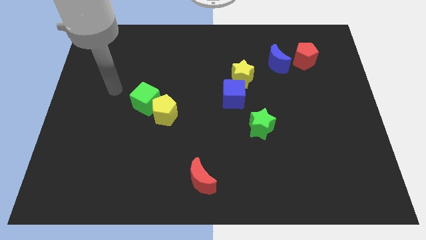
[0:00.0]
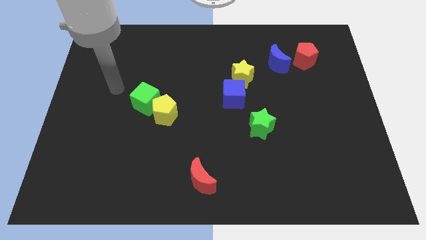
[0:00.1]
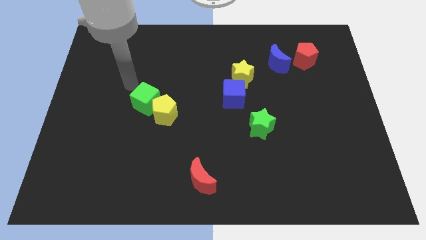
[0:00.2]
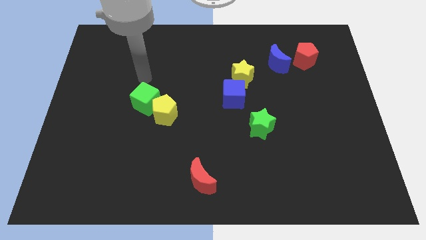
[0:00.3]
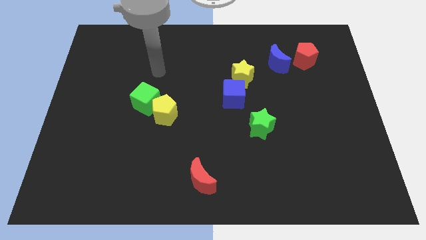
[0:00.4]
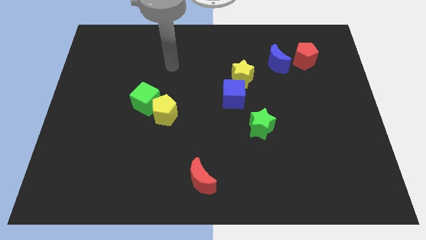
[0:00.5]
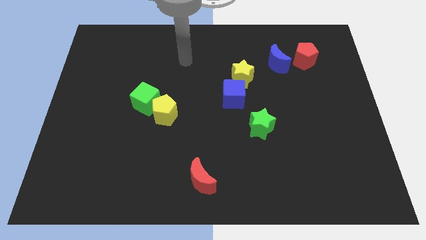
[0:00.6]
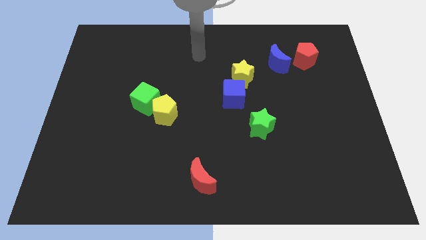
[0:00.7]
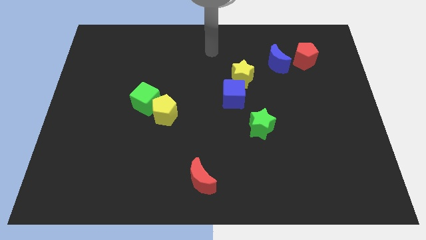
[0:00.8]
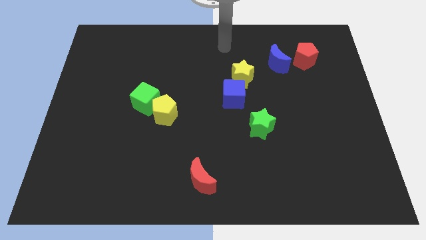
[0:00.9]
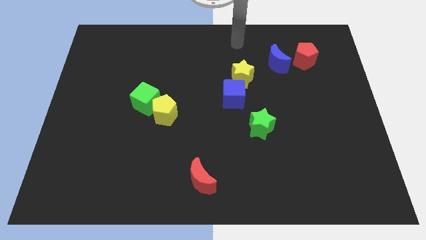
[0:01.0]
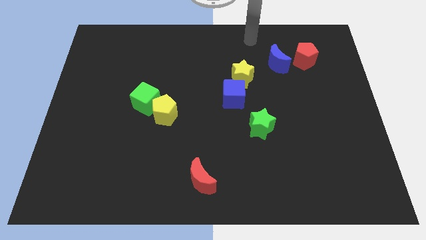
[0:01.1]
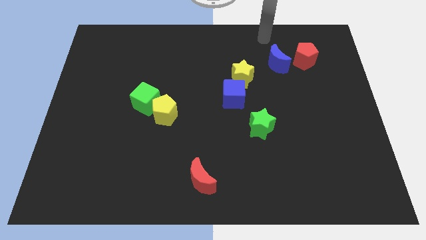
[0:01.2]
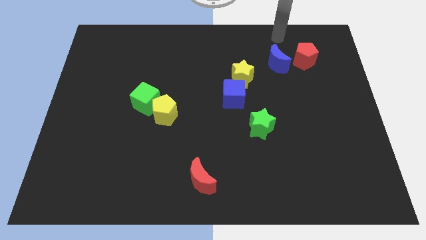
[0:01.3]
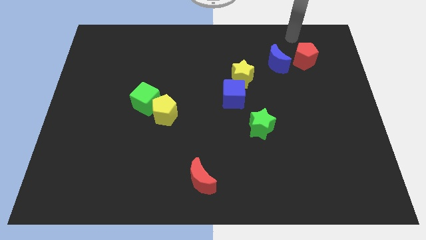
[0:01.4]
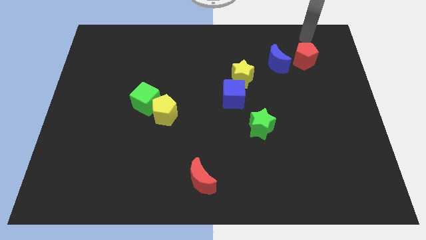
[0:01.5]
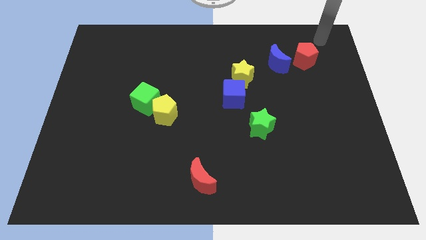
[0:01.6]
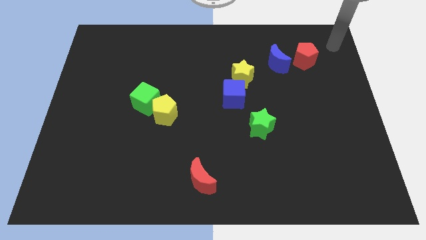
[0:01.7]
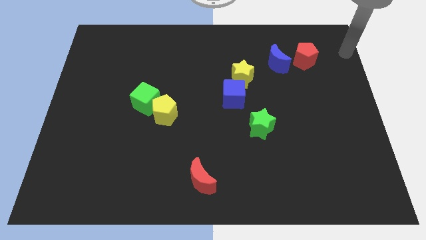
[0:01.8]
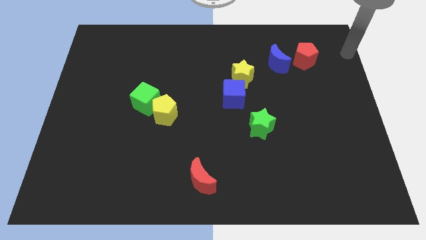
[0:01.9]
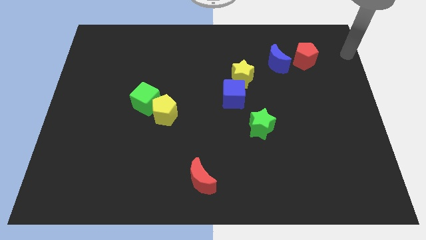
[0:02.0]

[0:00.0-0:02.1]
move your arm on the top right corner of the board

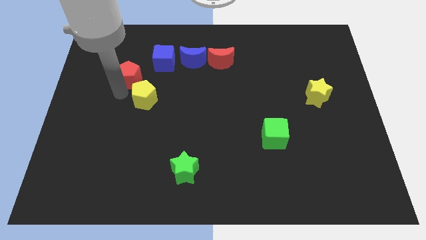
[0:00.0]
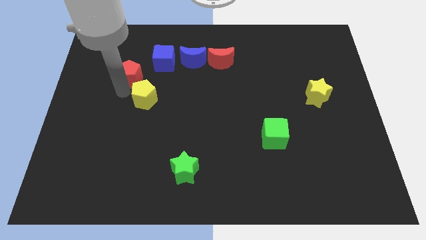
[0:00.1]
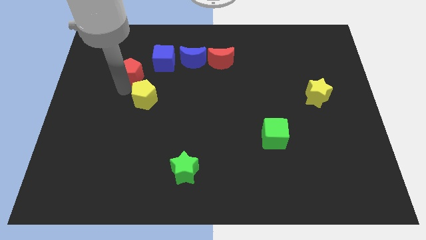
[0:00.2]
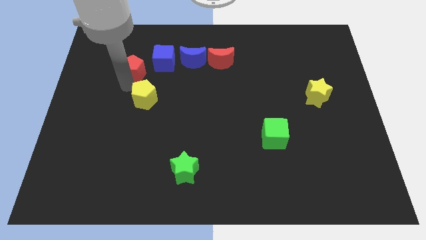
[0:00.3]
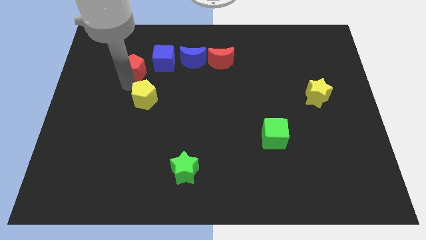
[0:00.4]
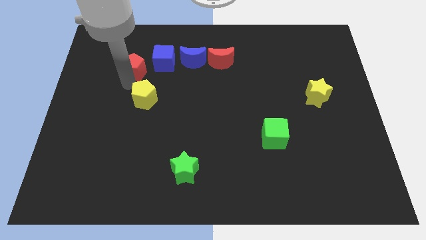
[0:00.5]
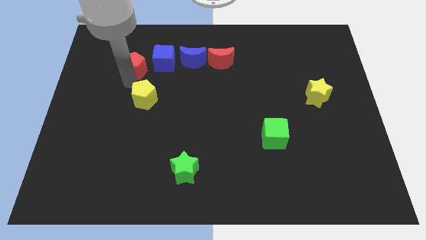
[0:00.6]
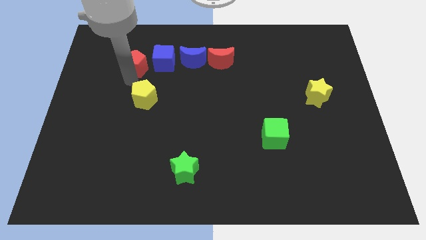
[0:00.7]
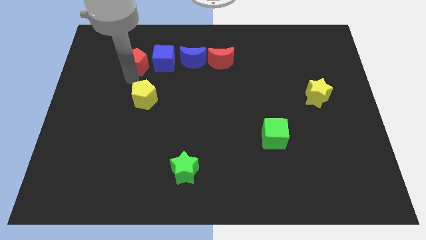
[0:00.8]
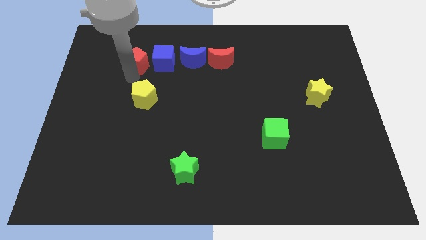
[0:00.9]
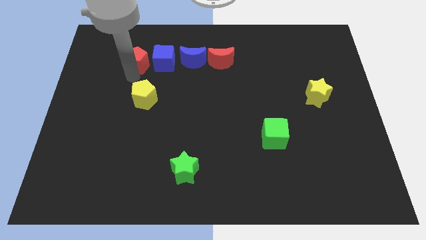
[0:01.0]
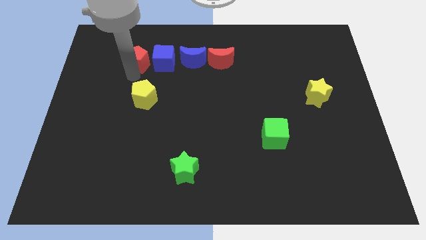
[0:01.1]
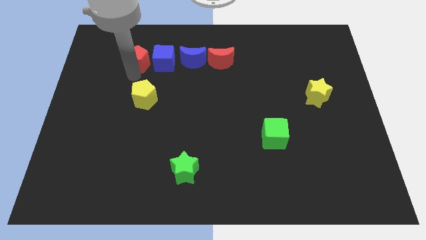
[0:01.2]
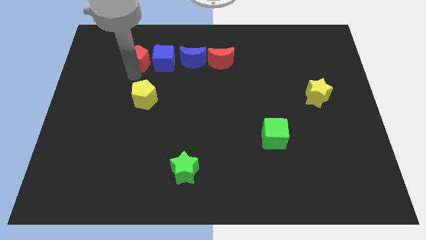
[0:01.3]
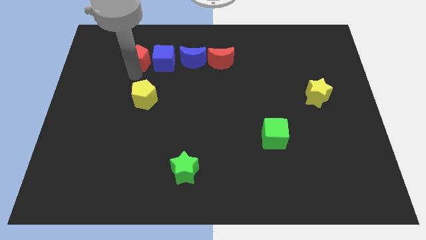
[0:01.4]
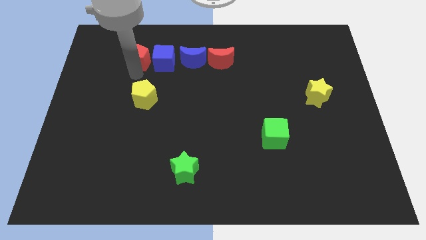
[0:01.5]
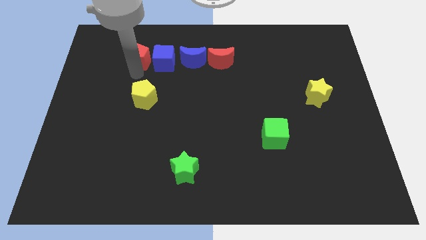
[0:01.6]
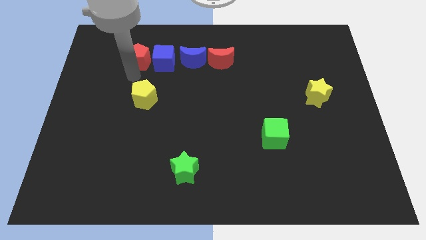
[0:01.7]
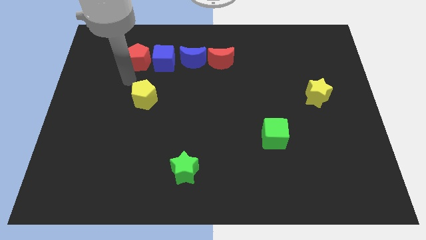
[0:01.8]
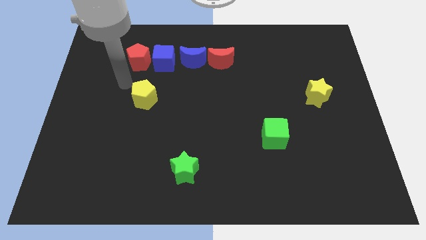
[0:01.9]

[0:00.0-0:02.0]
move the red pentagon to the left of blue cube

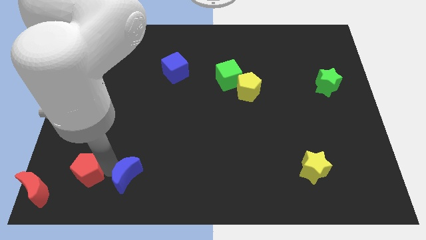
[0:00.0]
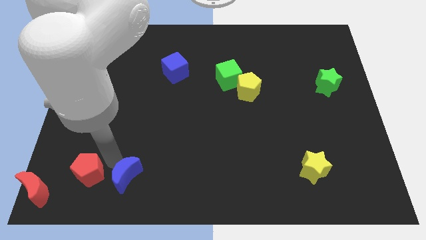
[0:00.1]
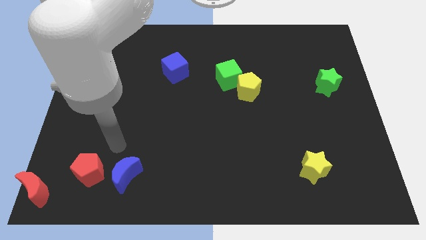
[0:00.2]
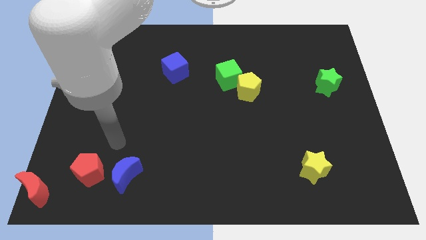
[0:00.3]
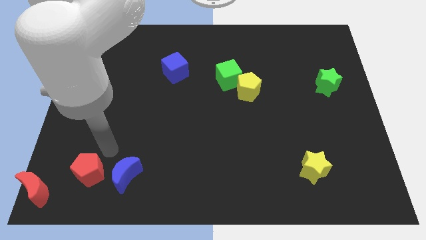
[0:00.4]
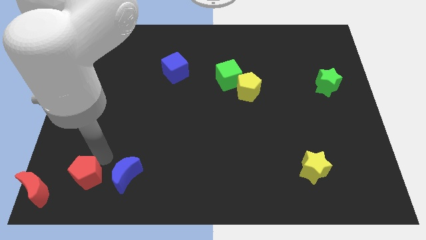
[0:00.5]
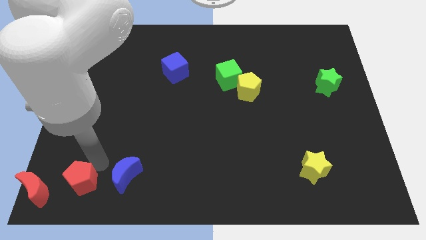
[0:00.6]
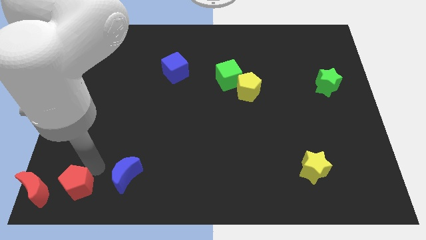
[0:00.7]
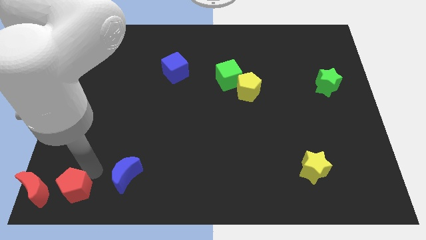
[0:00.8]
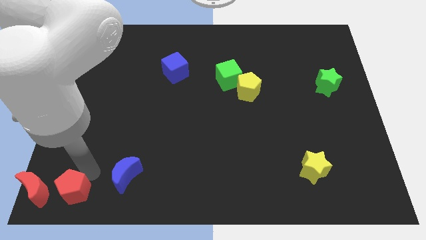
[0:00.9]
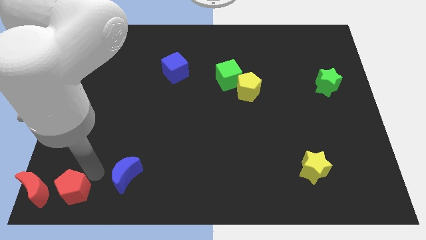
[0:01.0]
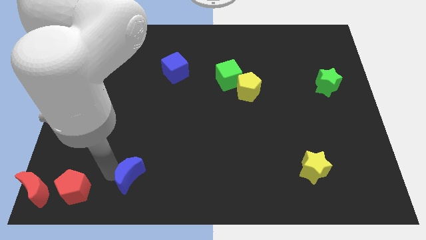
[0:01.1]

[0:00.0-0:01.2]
move the red pentagon to the right of the red crescent

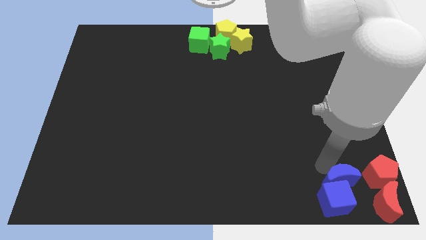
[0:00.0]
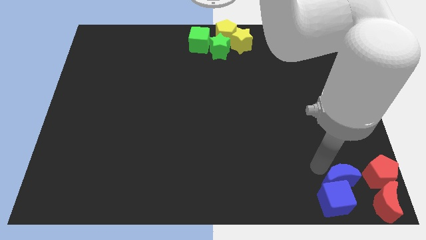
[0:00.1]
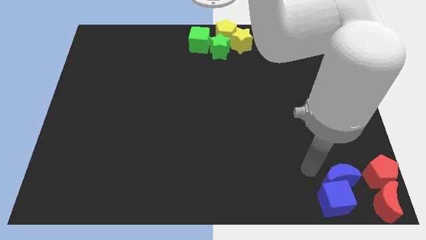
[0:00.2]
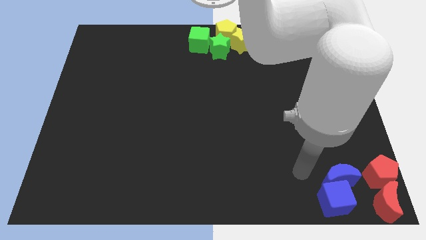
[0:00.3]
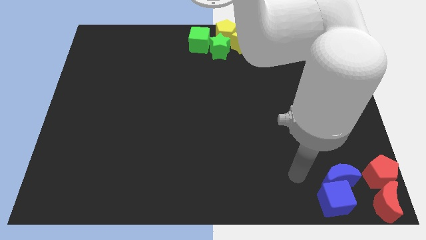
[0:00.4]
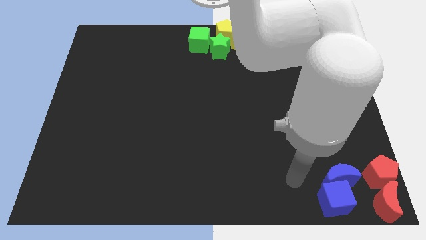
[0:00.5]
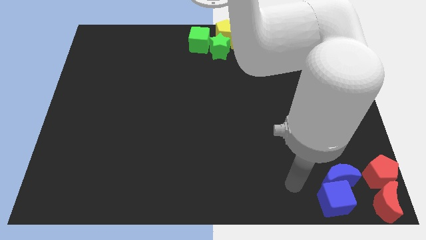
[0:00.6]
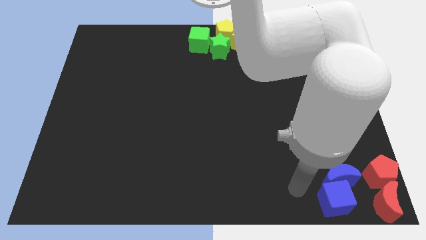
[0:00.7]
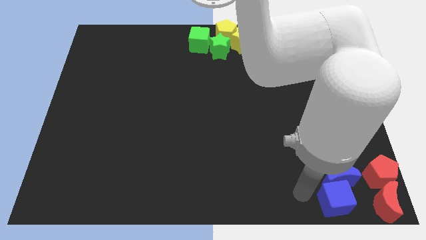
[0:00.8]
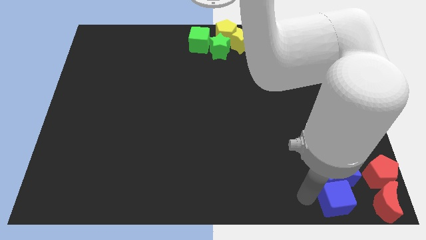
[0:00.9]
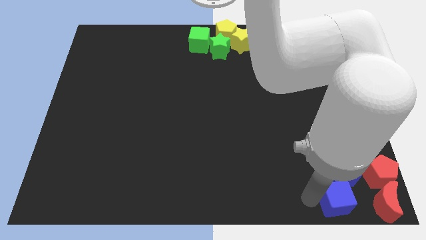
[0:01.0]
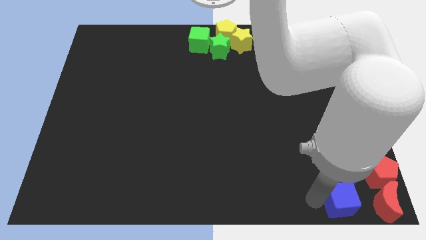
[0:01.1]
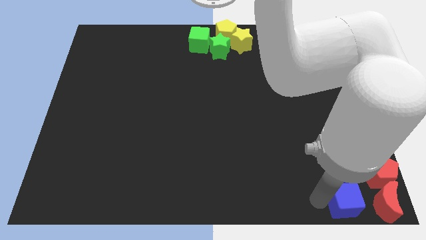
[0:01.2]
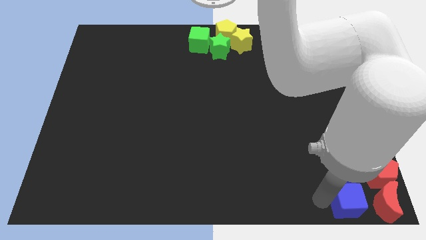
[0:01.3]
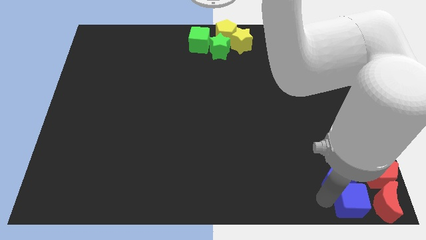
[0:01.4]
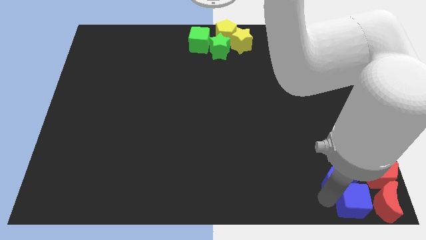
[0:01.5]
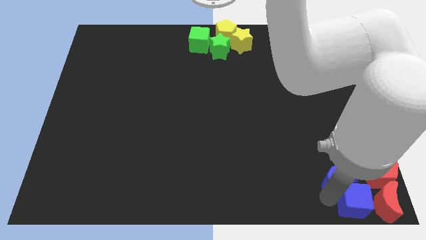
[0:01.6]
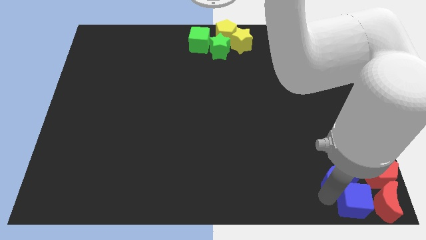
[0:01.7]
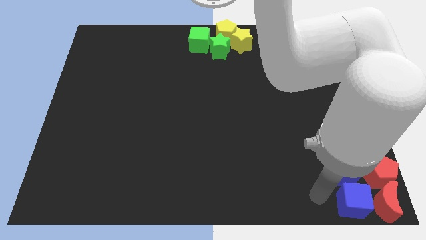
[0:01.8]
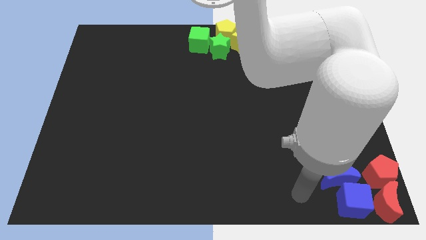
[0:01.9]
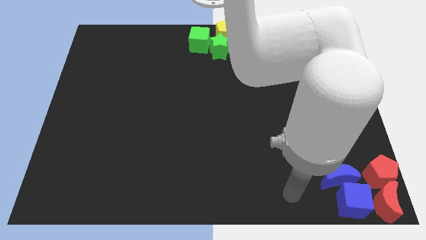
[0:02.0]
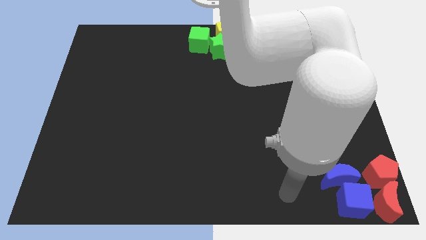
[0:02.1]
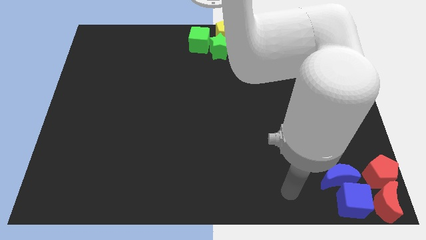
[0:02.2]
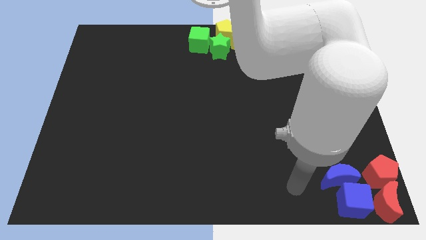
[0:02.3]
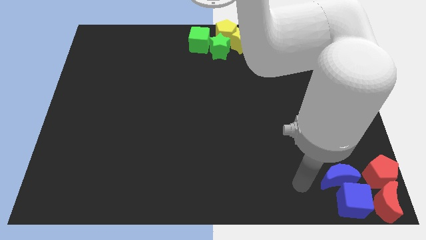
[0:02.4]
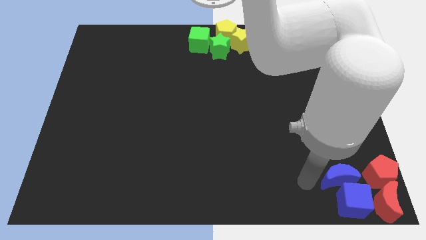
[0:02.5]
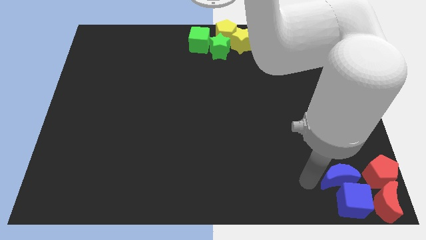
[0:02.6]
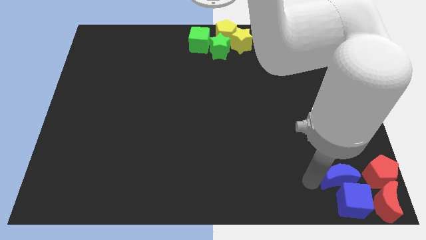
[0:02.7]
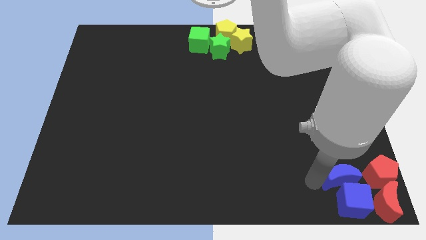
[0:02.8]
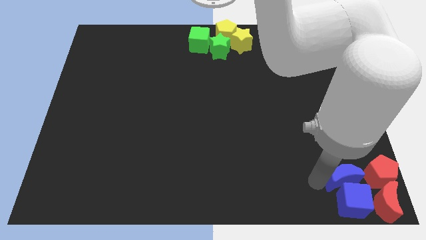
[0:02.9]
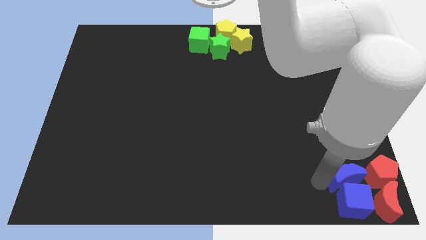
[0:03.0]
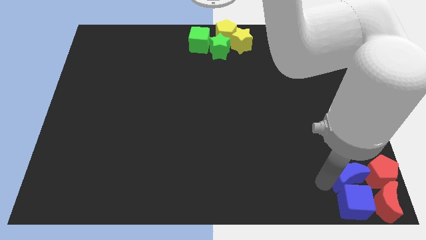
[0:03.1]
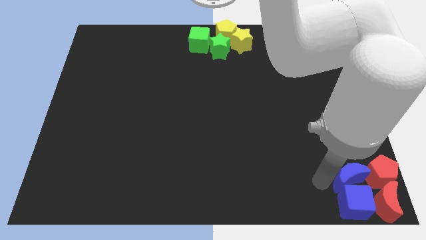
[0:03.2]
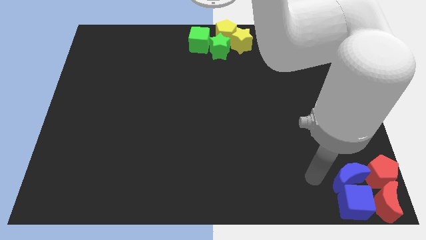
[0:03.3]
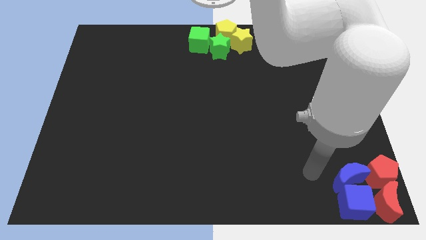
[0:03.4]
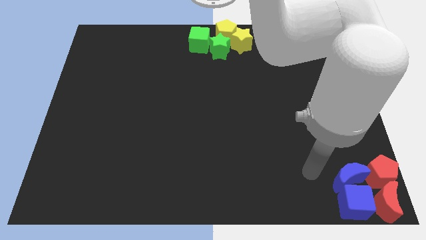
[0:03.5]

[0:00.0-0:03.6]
push the blue blocks towards the red blocks
